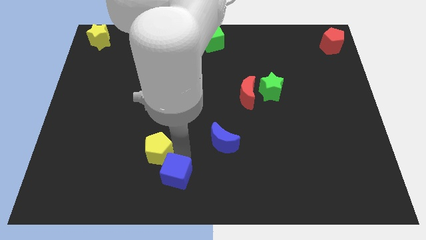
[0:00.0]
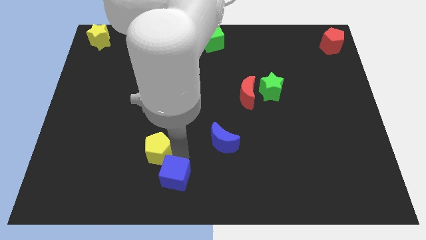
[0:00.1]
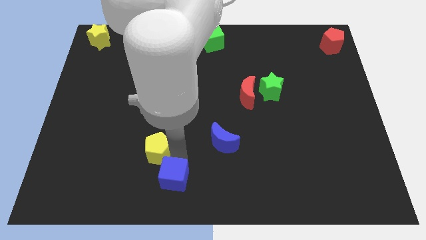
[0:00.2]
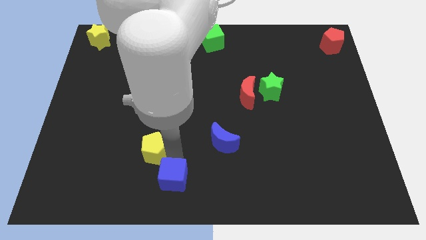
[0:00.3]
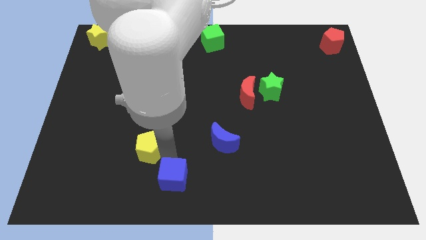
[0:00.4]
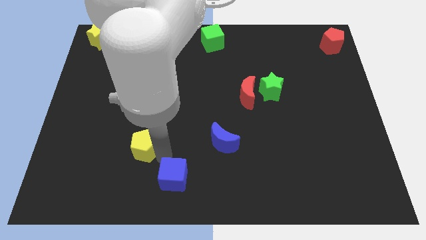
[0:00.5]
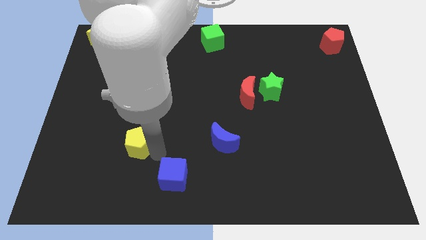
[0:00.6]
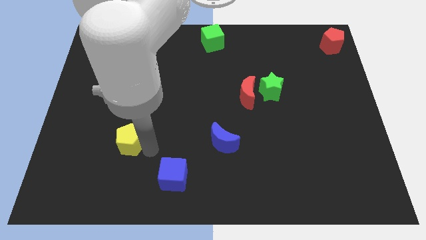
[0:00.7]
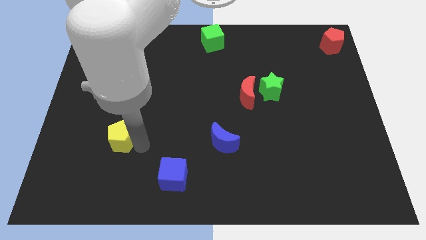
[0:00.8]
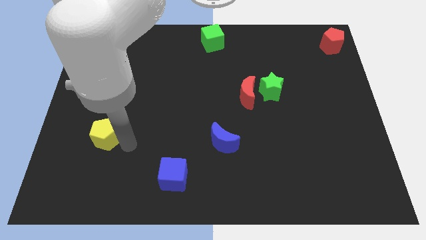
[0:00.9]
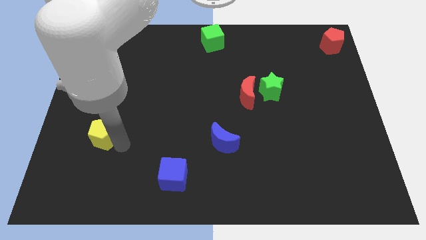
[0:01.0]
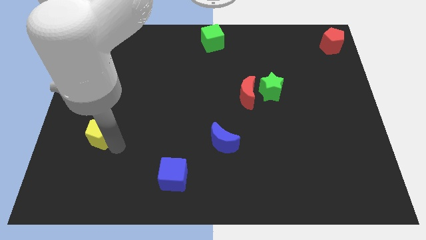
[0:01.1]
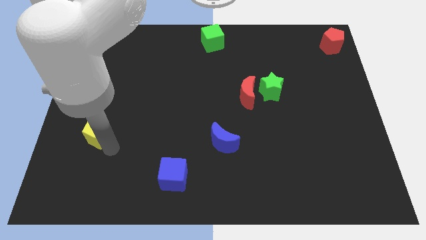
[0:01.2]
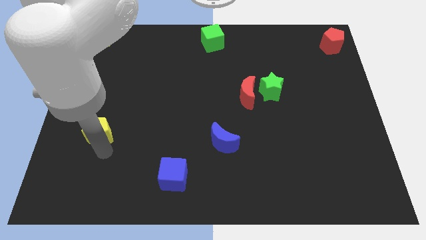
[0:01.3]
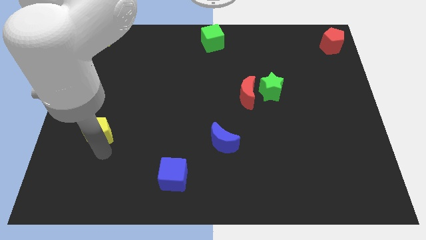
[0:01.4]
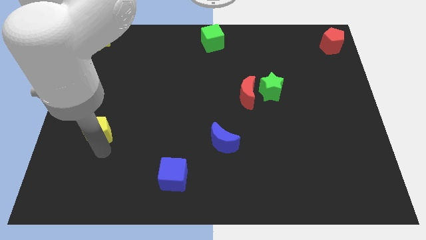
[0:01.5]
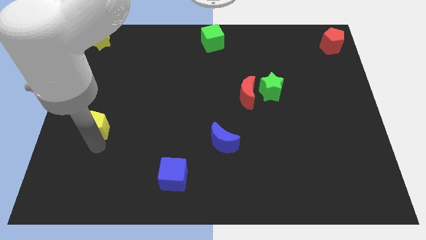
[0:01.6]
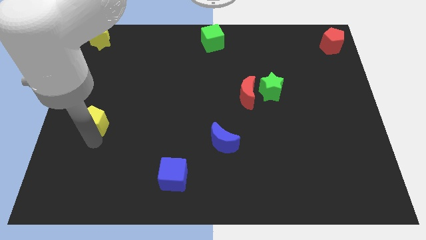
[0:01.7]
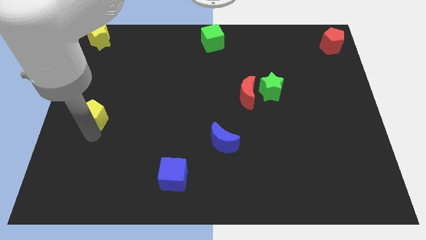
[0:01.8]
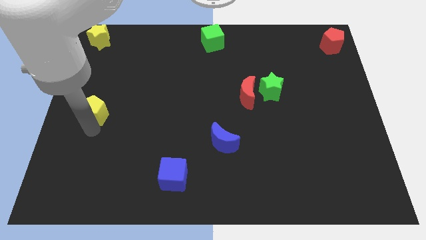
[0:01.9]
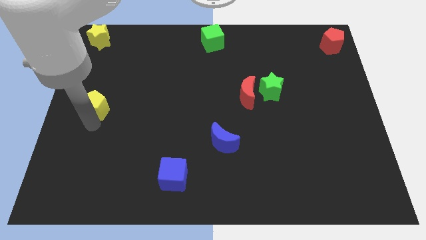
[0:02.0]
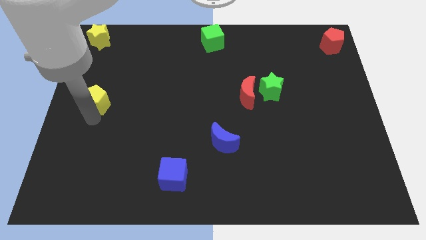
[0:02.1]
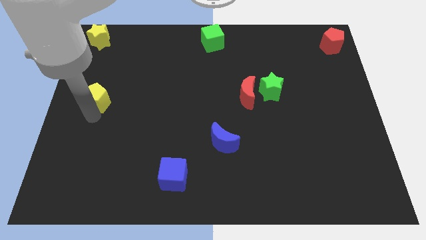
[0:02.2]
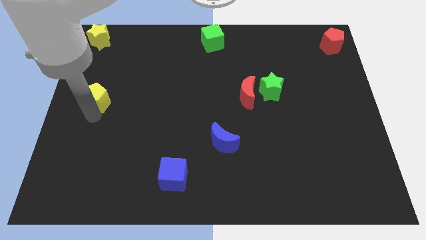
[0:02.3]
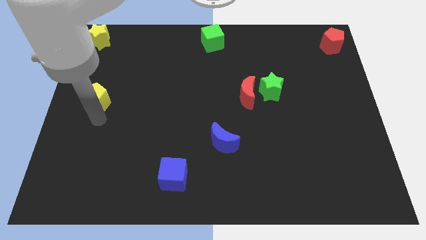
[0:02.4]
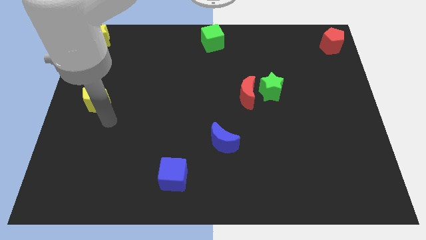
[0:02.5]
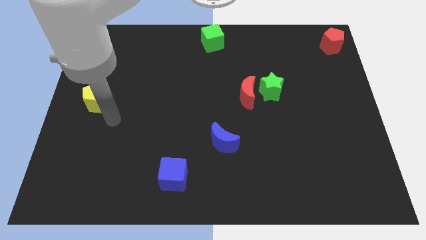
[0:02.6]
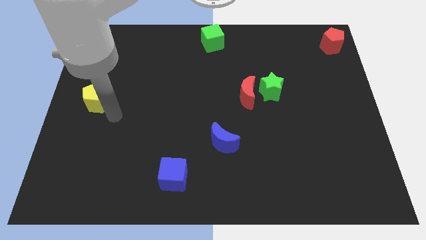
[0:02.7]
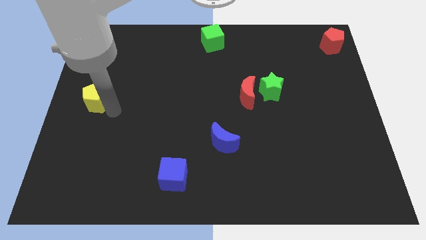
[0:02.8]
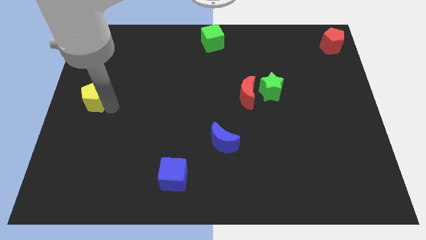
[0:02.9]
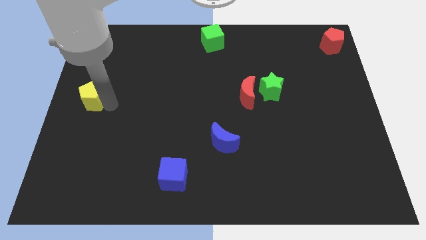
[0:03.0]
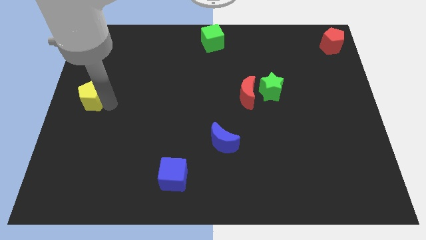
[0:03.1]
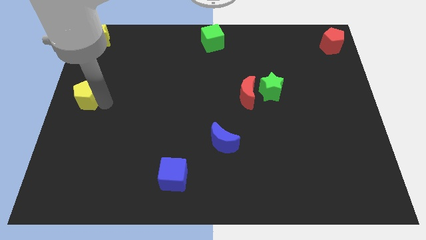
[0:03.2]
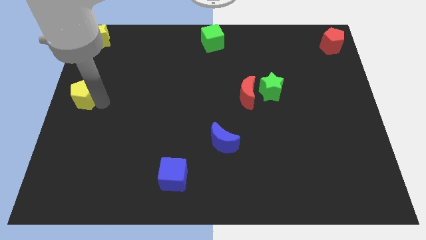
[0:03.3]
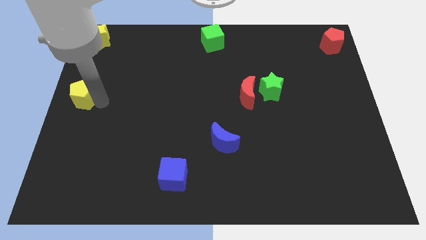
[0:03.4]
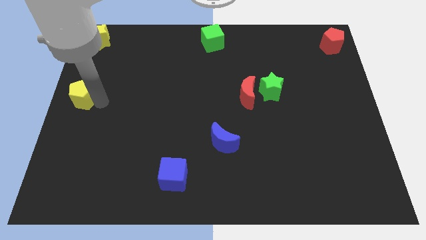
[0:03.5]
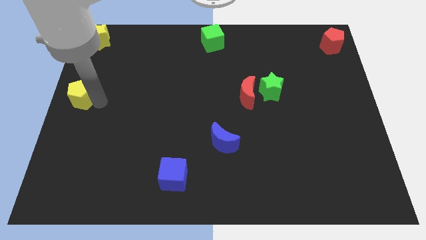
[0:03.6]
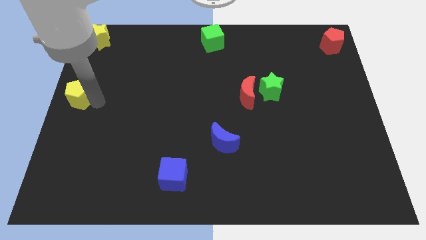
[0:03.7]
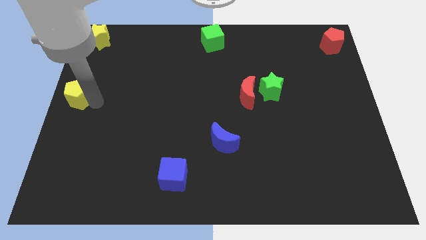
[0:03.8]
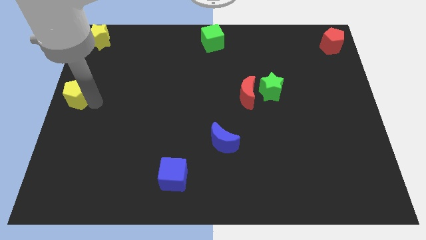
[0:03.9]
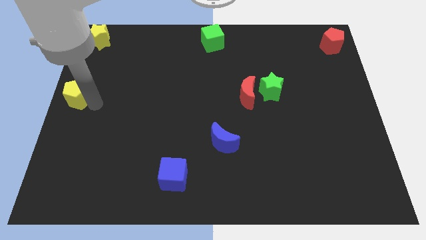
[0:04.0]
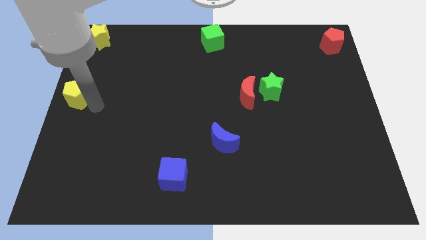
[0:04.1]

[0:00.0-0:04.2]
move the yellow pentagon to the left center of the board

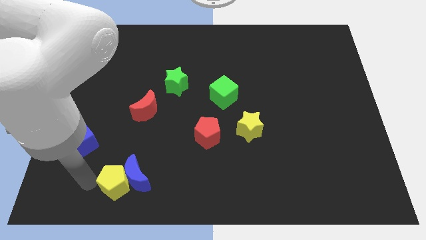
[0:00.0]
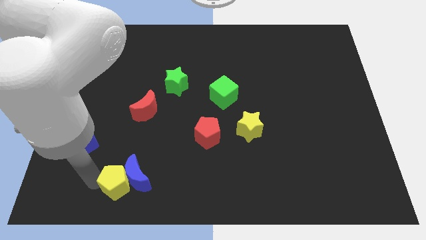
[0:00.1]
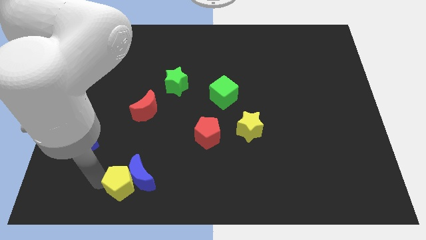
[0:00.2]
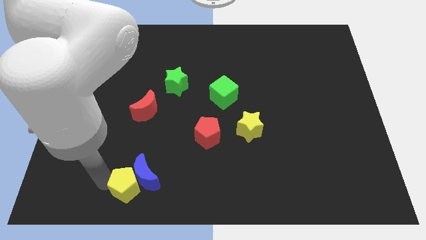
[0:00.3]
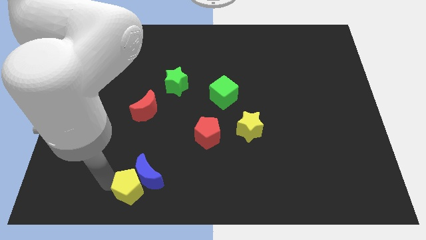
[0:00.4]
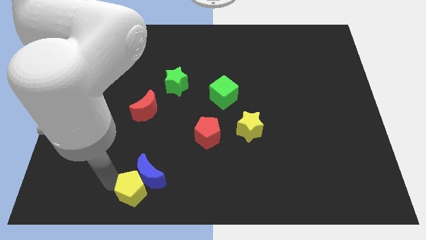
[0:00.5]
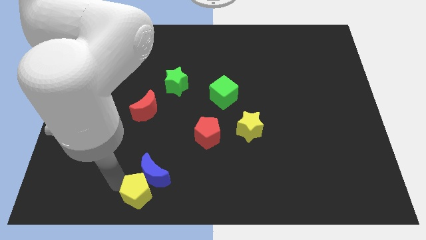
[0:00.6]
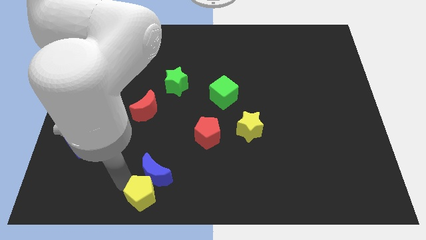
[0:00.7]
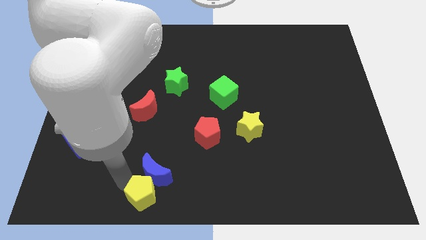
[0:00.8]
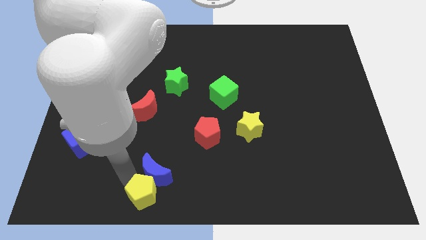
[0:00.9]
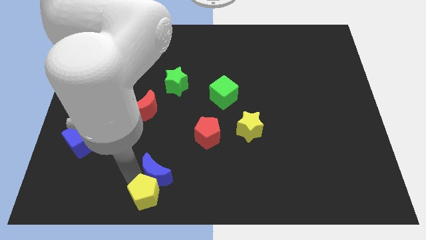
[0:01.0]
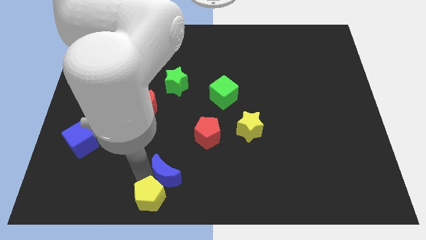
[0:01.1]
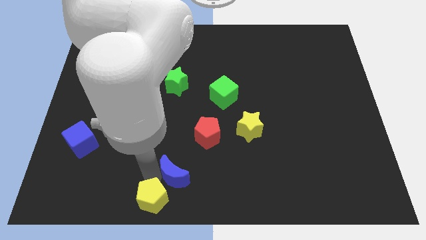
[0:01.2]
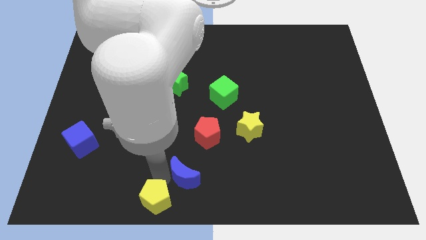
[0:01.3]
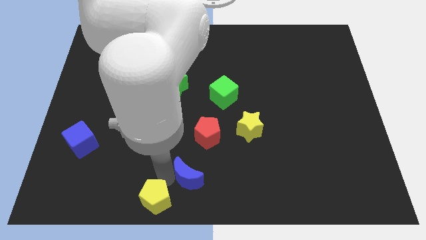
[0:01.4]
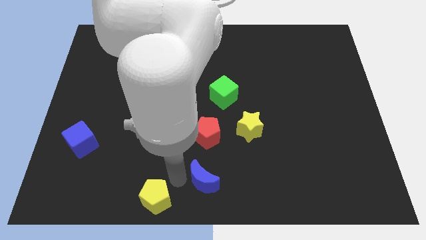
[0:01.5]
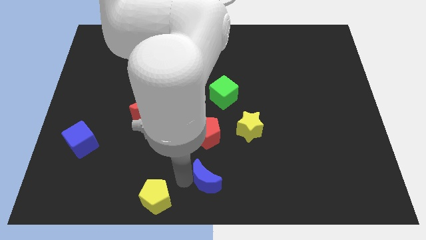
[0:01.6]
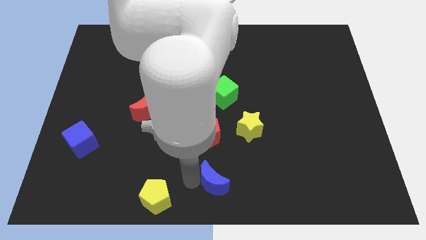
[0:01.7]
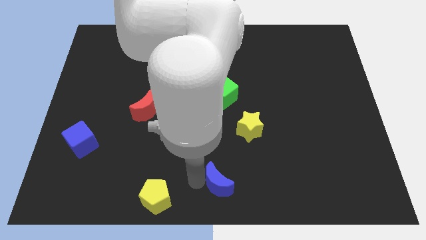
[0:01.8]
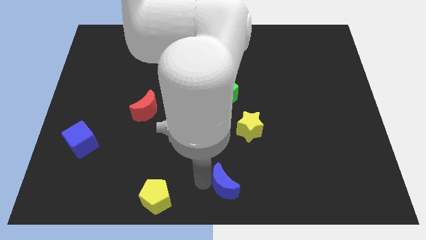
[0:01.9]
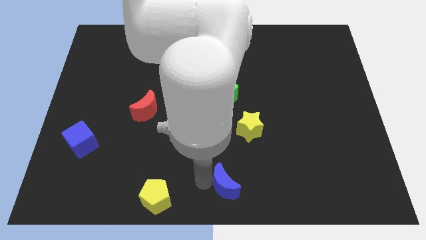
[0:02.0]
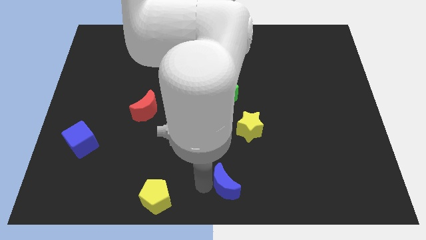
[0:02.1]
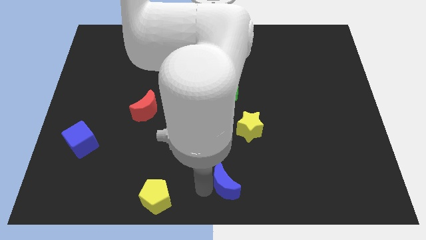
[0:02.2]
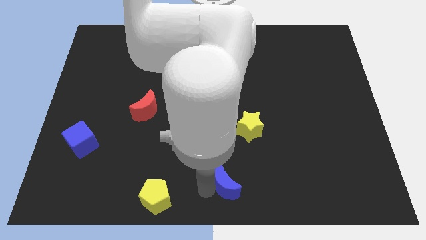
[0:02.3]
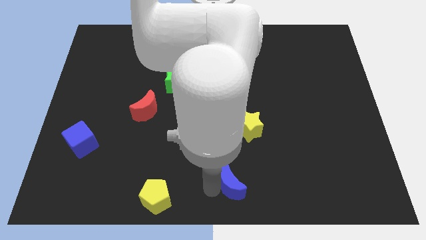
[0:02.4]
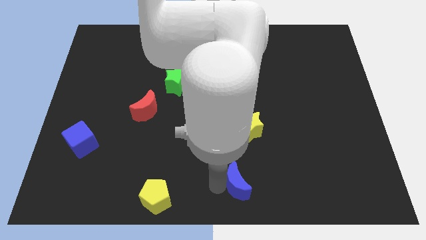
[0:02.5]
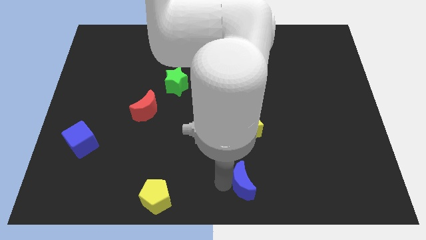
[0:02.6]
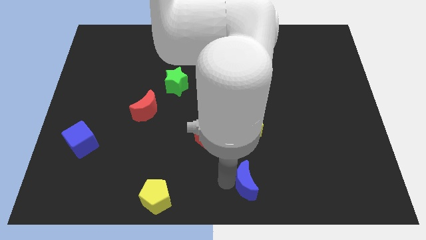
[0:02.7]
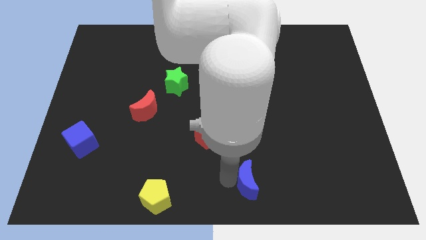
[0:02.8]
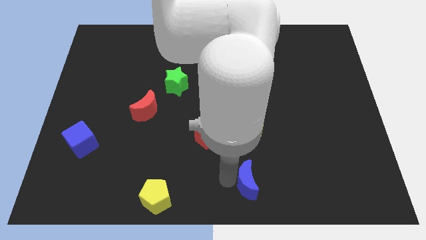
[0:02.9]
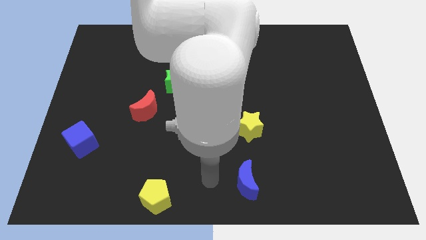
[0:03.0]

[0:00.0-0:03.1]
place the blue crescent underneath the yellow star

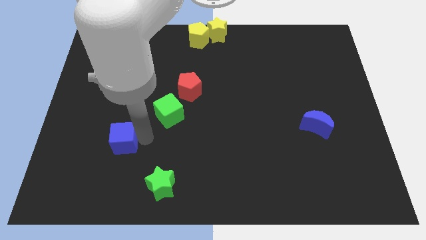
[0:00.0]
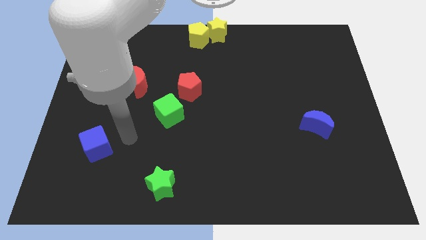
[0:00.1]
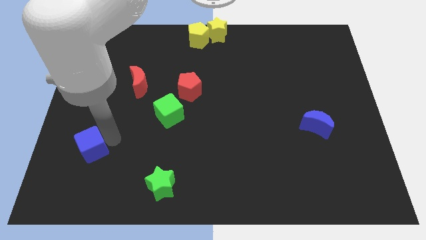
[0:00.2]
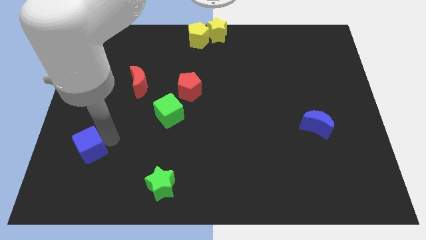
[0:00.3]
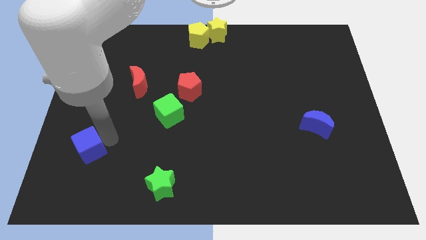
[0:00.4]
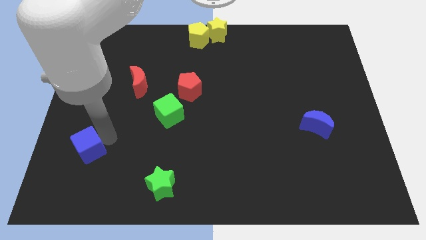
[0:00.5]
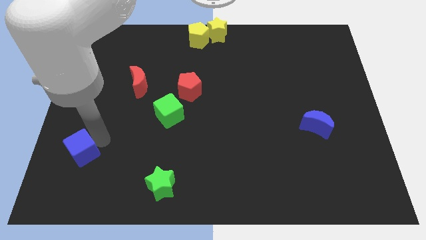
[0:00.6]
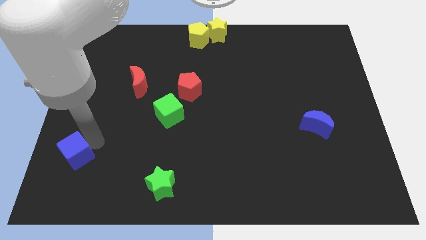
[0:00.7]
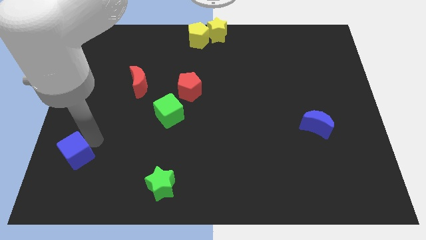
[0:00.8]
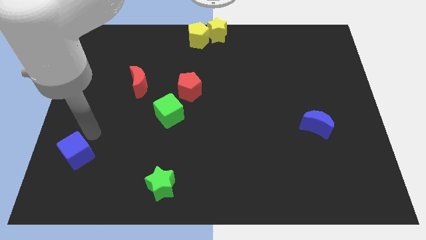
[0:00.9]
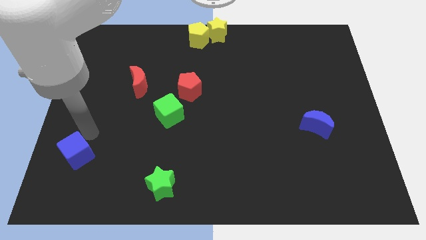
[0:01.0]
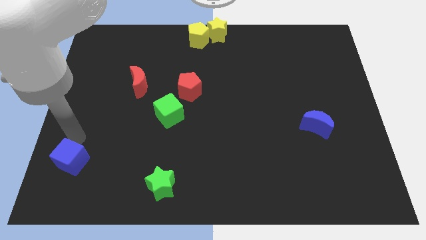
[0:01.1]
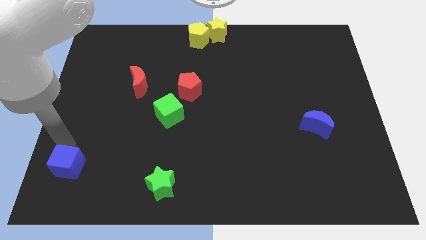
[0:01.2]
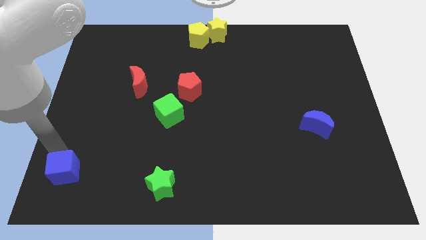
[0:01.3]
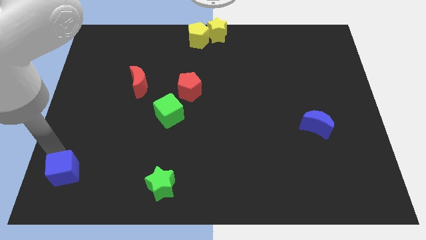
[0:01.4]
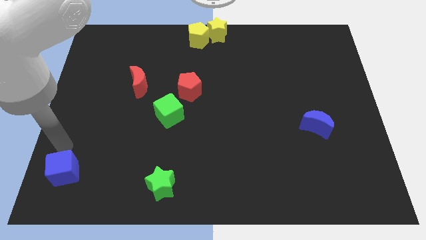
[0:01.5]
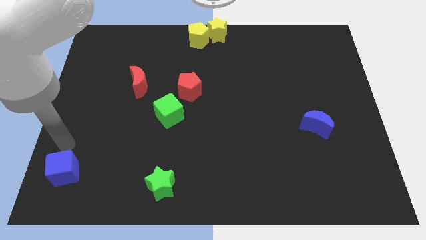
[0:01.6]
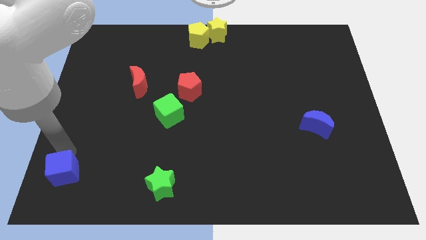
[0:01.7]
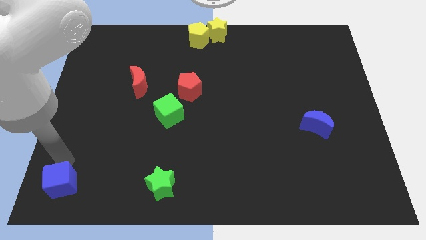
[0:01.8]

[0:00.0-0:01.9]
move the blue cube to the left of the board
